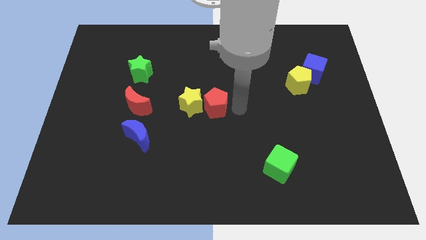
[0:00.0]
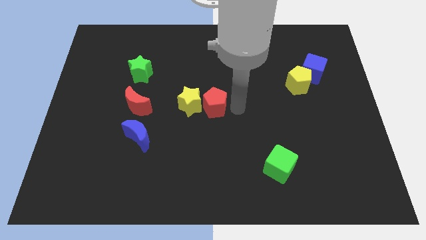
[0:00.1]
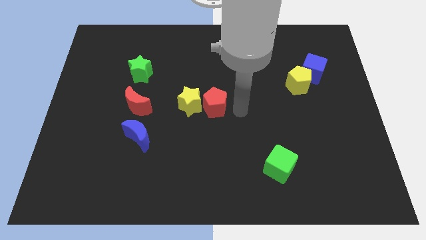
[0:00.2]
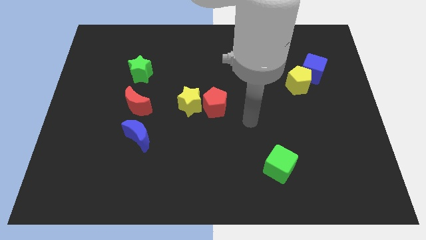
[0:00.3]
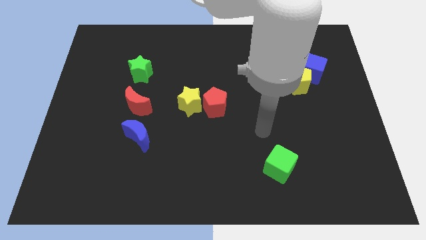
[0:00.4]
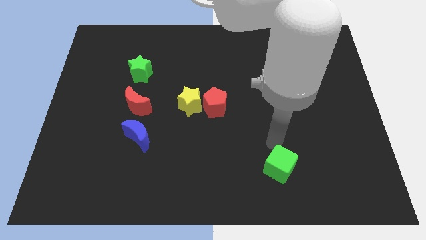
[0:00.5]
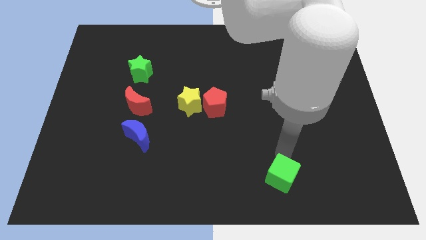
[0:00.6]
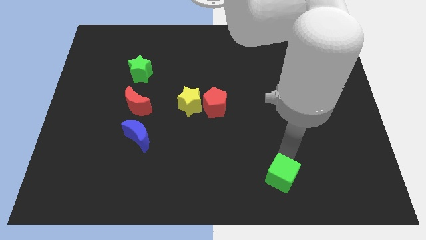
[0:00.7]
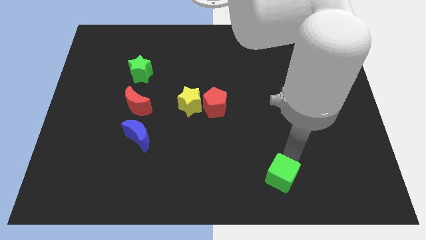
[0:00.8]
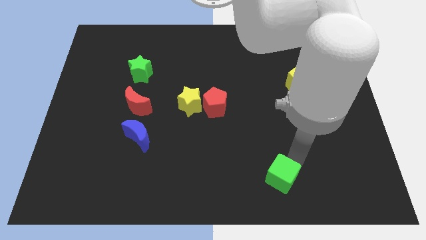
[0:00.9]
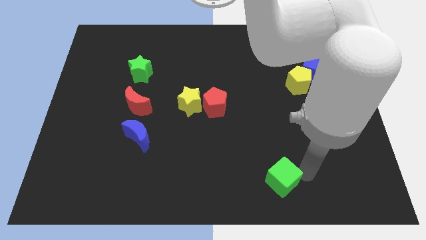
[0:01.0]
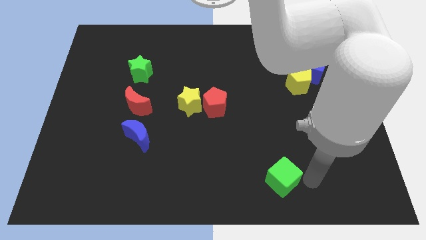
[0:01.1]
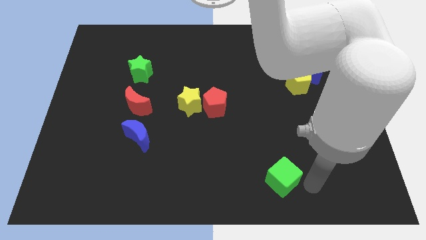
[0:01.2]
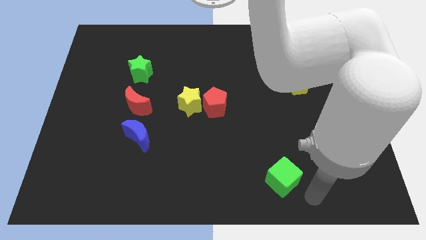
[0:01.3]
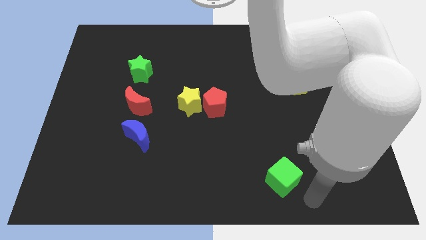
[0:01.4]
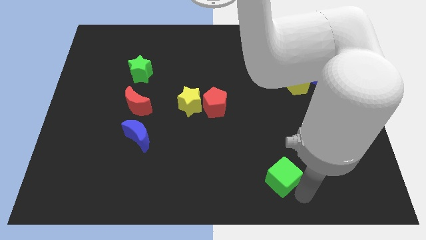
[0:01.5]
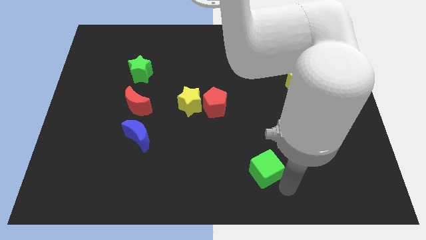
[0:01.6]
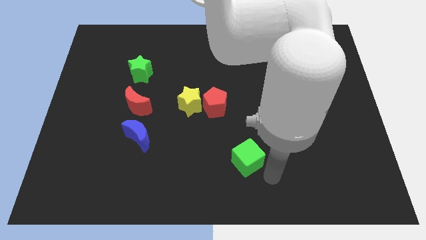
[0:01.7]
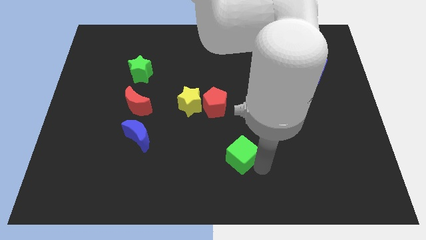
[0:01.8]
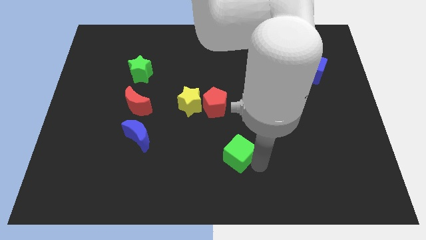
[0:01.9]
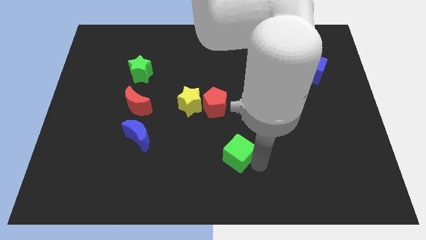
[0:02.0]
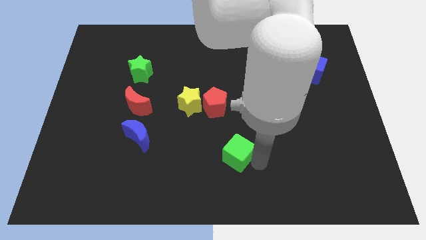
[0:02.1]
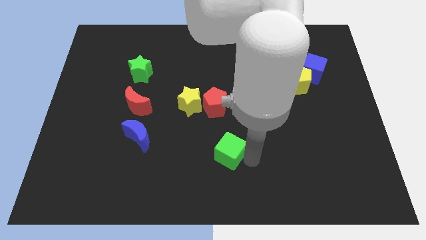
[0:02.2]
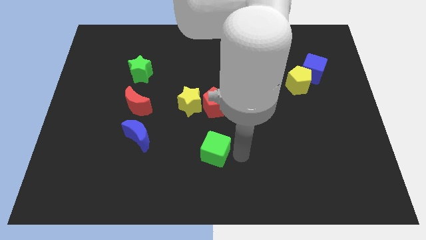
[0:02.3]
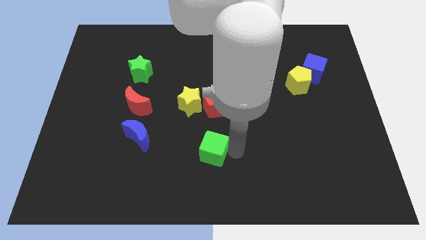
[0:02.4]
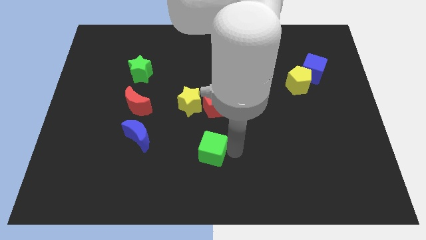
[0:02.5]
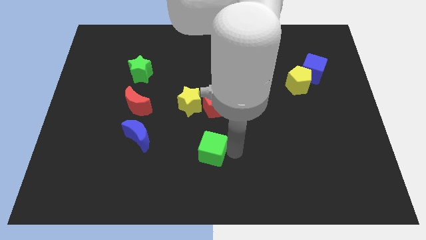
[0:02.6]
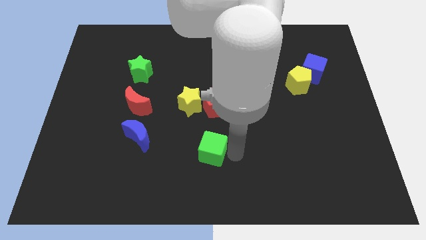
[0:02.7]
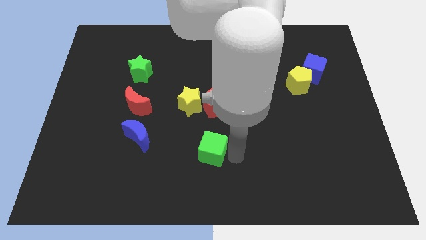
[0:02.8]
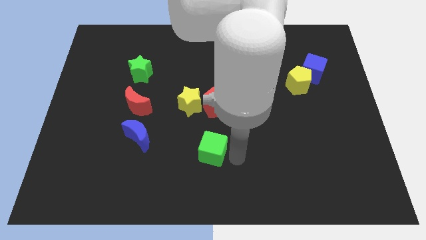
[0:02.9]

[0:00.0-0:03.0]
place the green cube below the red pentagon

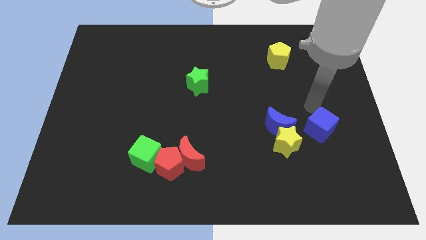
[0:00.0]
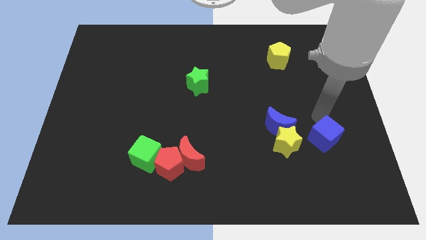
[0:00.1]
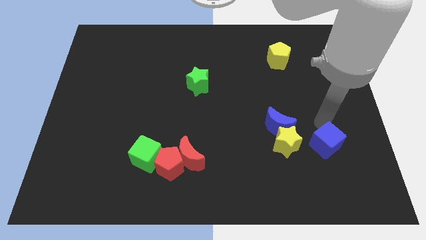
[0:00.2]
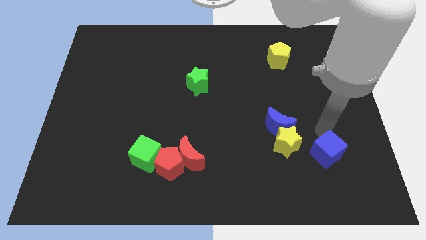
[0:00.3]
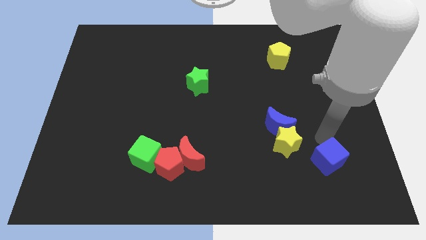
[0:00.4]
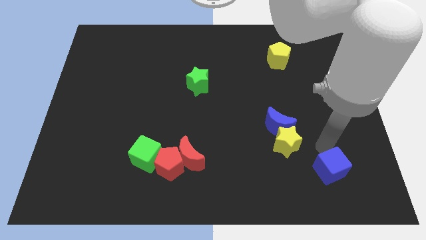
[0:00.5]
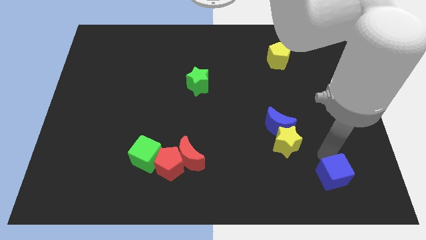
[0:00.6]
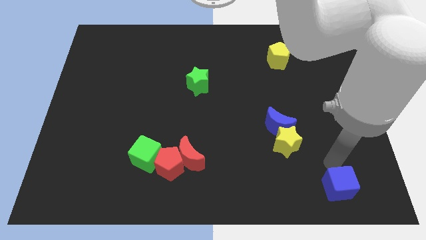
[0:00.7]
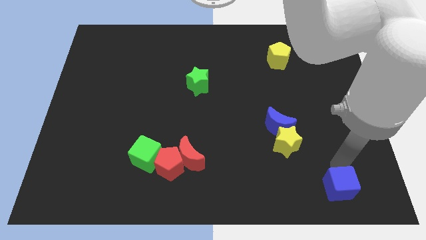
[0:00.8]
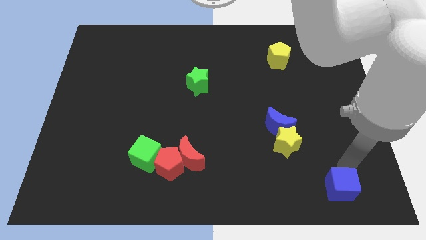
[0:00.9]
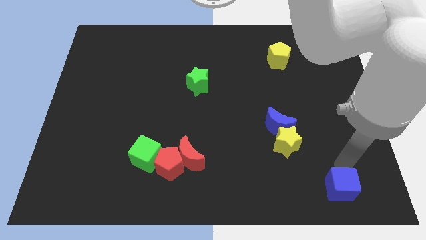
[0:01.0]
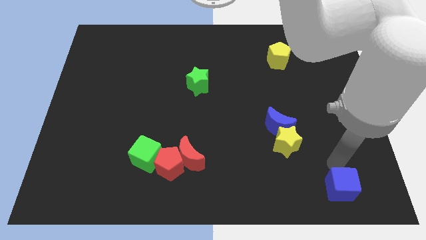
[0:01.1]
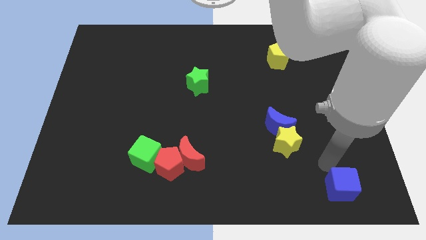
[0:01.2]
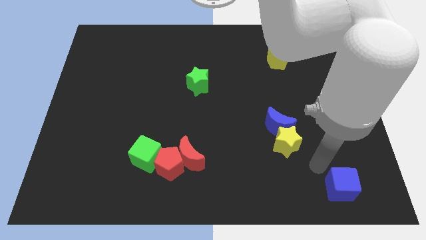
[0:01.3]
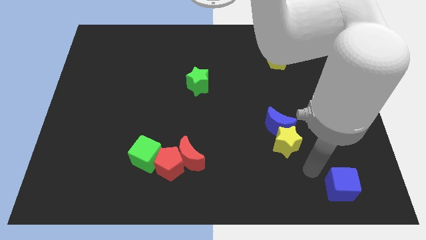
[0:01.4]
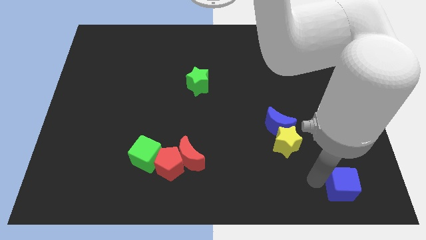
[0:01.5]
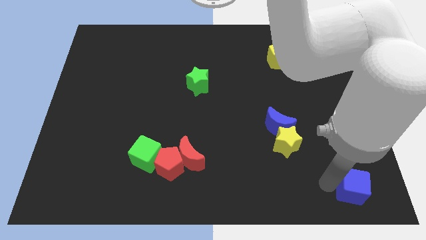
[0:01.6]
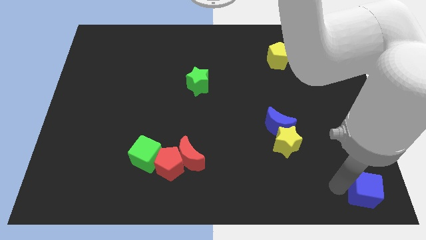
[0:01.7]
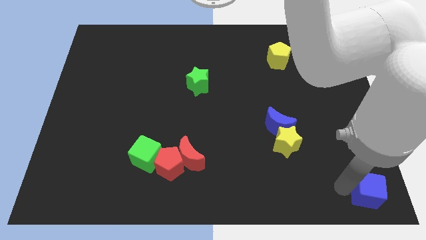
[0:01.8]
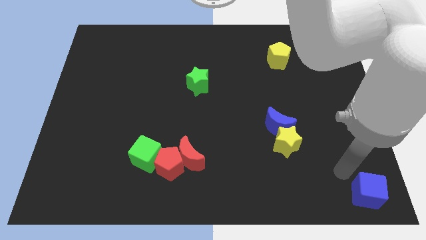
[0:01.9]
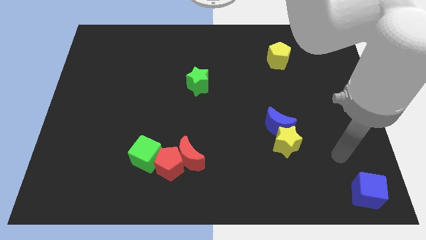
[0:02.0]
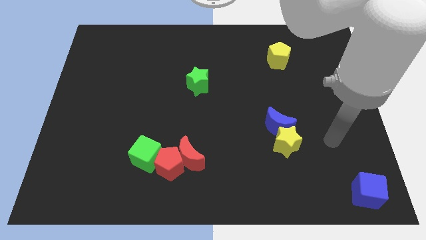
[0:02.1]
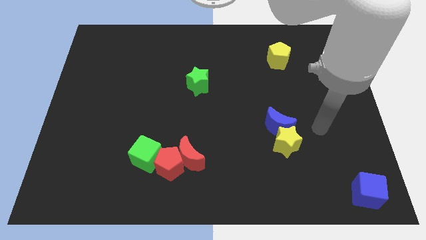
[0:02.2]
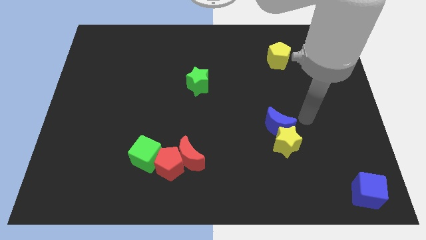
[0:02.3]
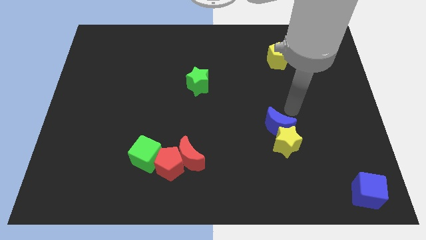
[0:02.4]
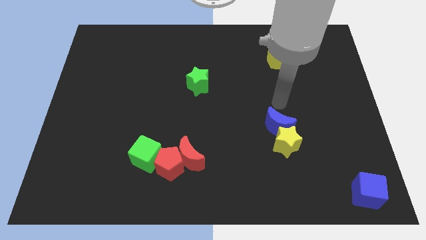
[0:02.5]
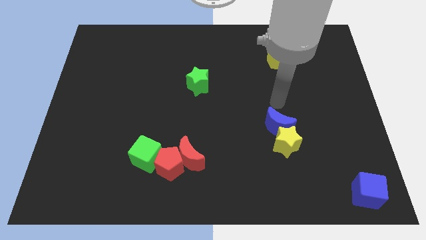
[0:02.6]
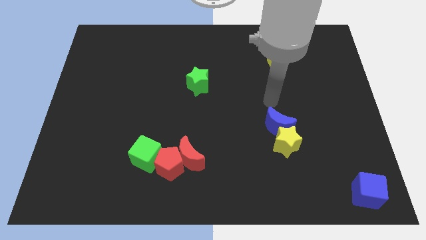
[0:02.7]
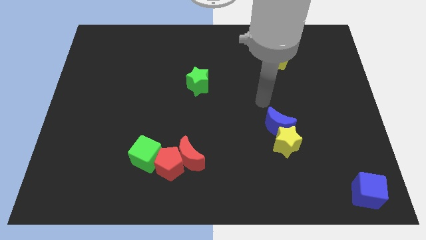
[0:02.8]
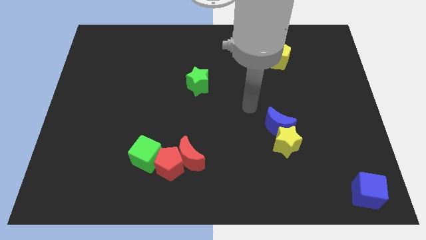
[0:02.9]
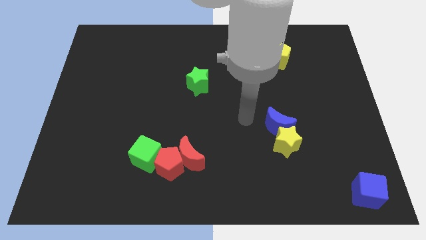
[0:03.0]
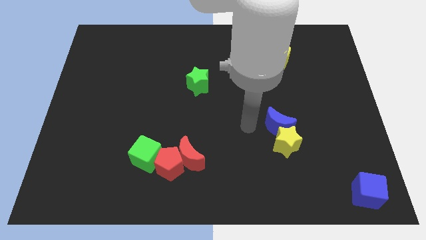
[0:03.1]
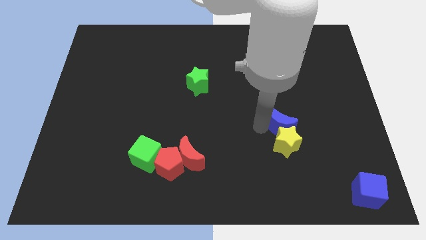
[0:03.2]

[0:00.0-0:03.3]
move the blue cube towards the bottom right side of the board

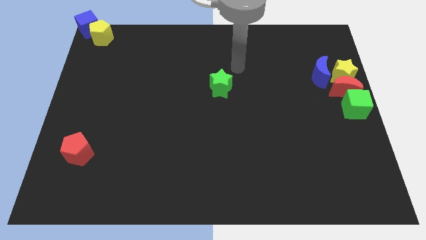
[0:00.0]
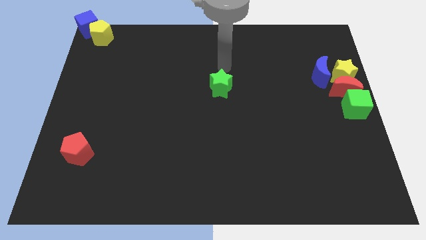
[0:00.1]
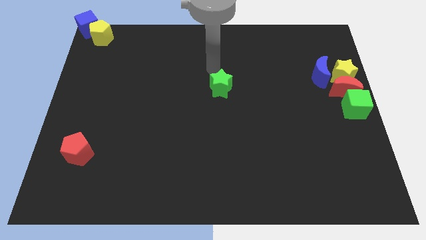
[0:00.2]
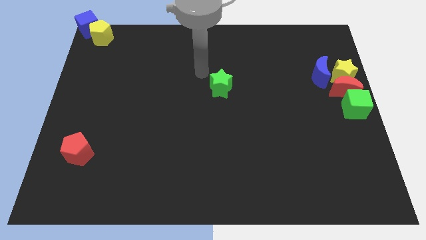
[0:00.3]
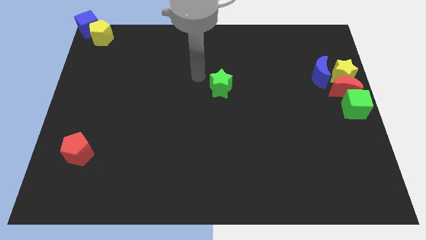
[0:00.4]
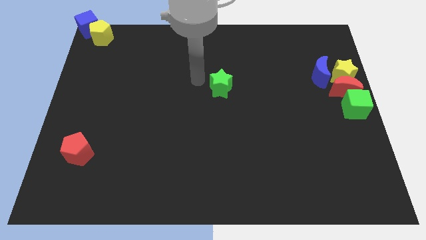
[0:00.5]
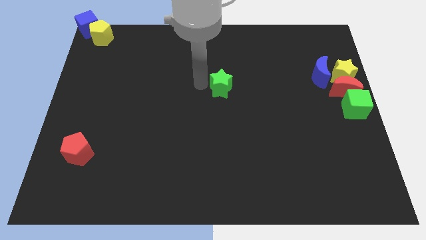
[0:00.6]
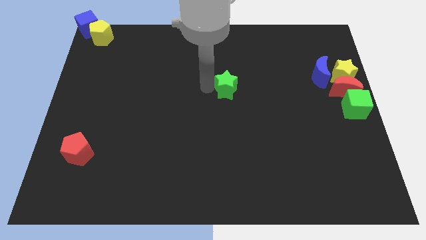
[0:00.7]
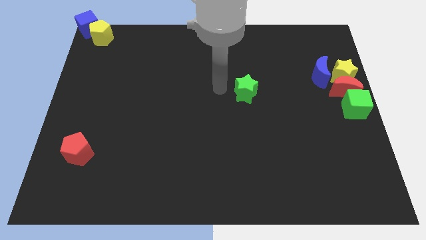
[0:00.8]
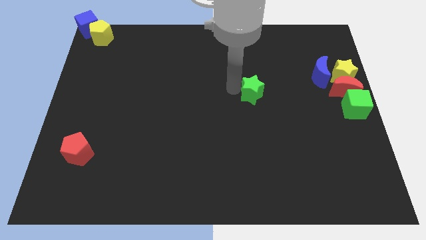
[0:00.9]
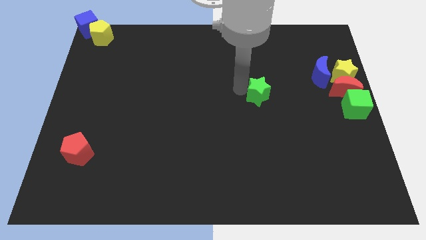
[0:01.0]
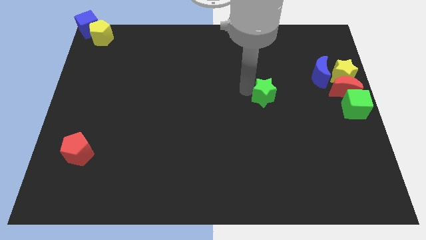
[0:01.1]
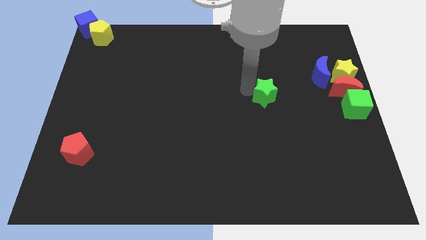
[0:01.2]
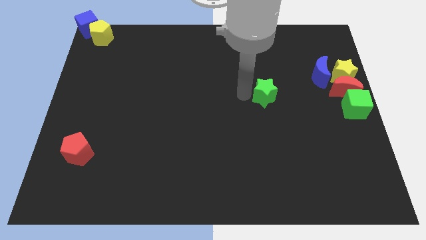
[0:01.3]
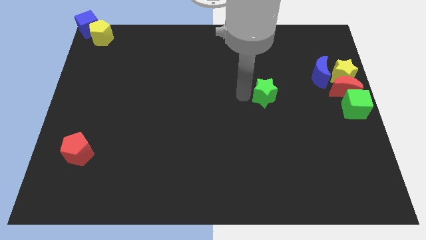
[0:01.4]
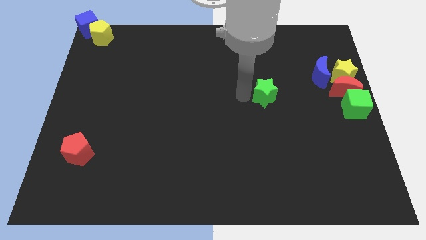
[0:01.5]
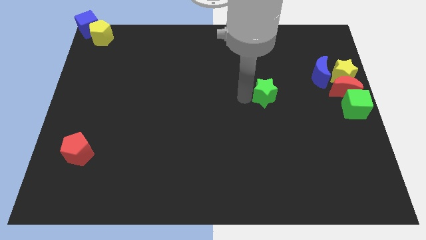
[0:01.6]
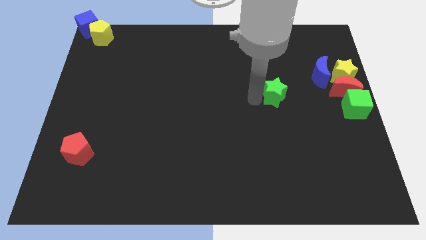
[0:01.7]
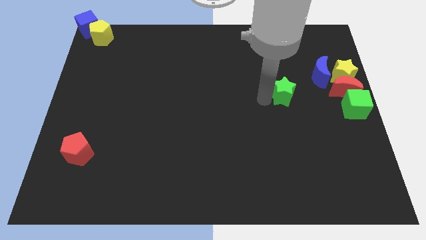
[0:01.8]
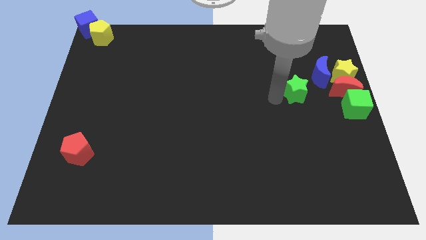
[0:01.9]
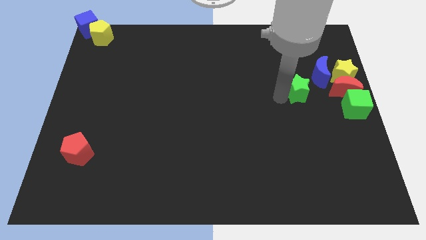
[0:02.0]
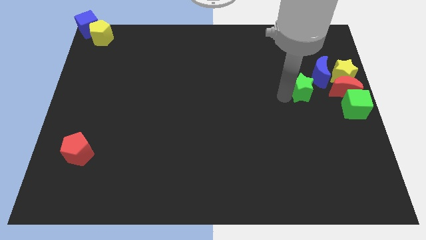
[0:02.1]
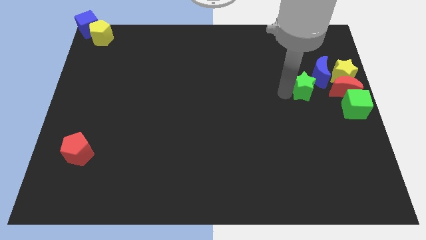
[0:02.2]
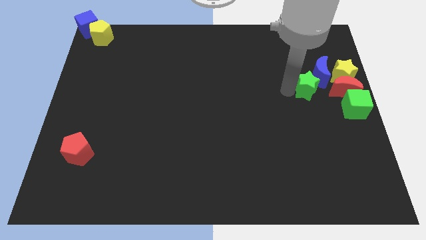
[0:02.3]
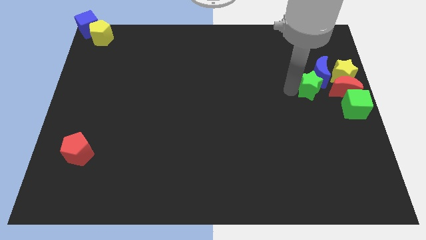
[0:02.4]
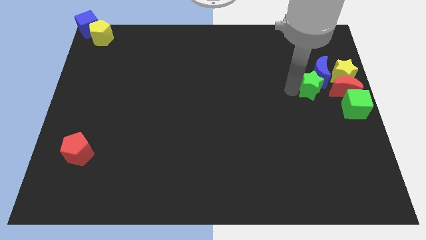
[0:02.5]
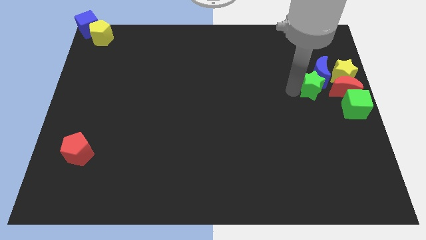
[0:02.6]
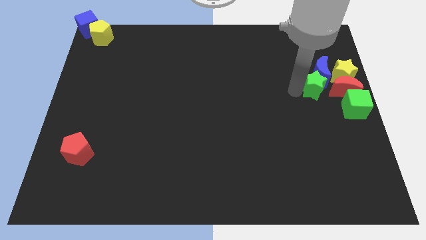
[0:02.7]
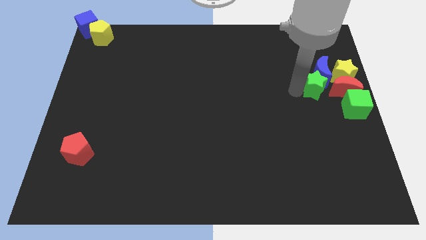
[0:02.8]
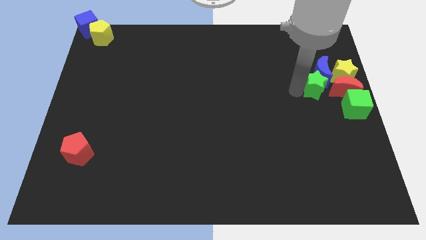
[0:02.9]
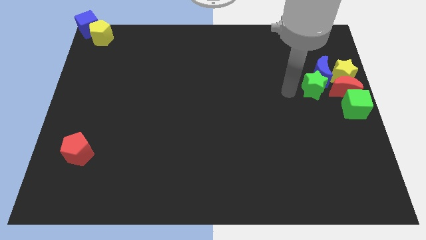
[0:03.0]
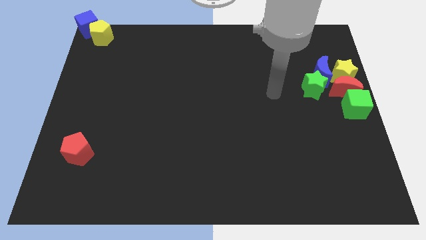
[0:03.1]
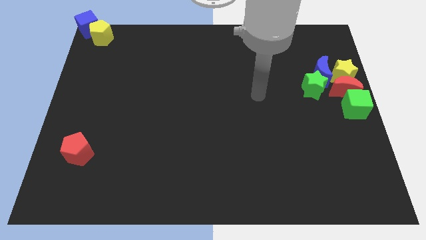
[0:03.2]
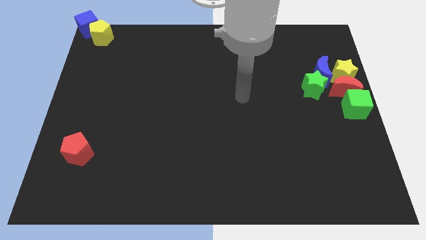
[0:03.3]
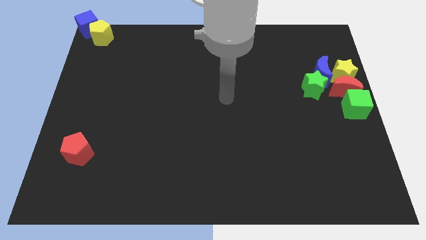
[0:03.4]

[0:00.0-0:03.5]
push the green star right side of the board beside the red crescent
